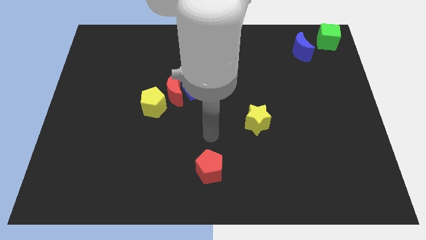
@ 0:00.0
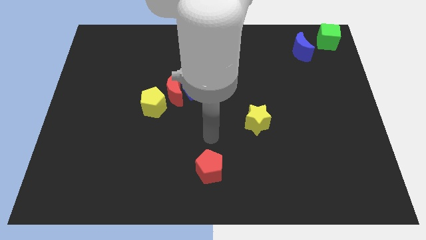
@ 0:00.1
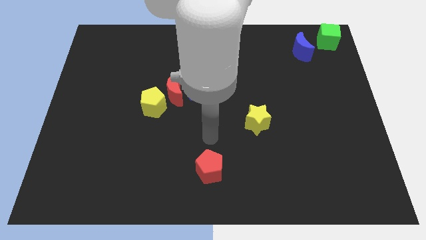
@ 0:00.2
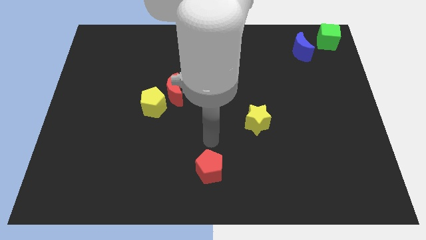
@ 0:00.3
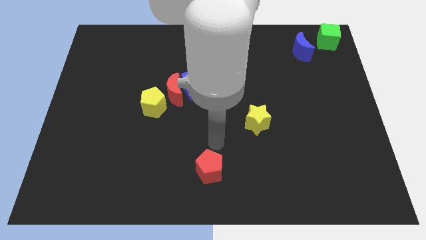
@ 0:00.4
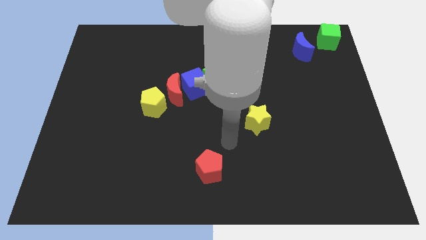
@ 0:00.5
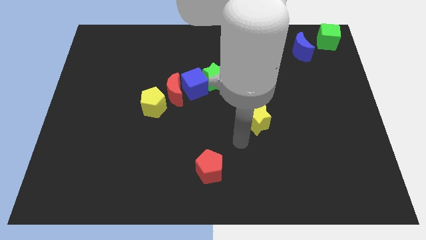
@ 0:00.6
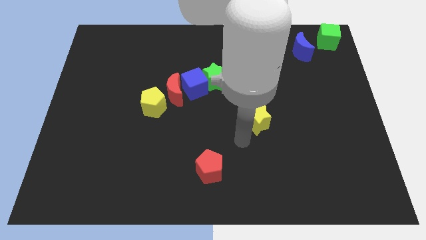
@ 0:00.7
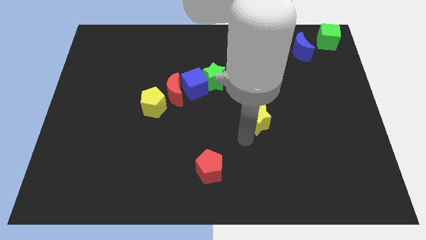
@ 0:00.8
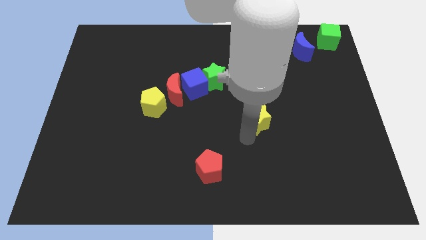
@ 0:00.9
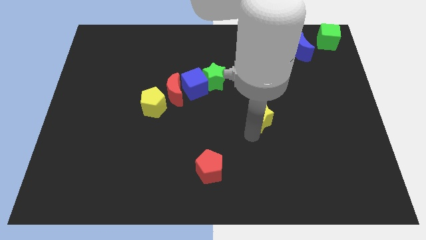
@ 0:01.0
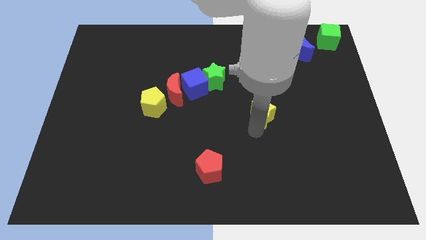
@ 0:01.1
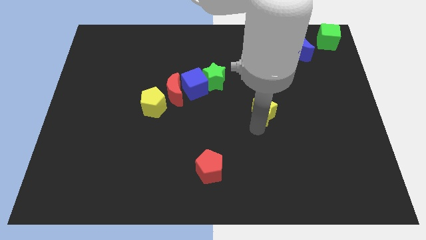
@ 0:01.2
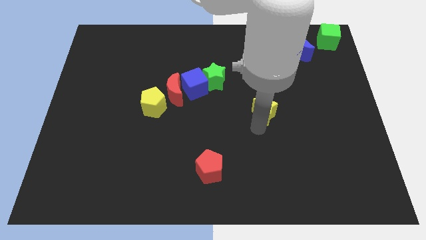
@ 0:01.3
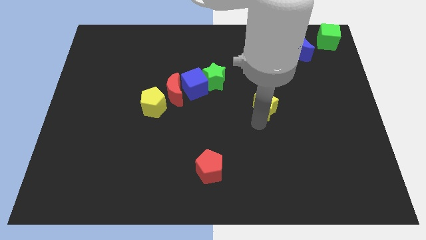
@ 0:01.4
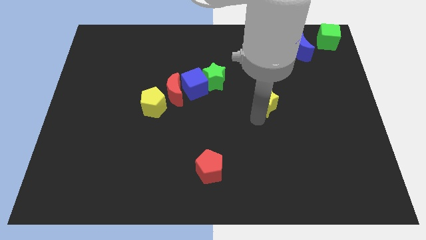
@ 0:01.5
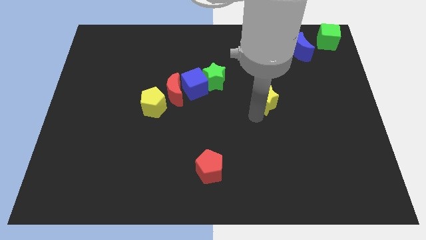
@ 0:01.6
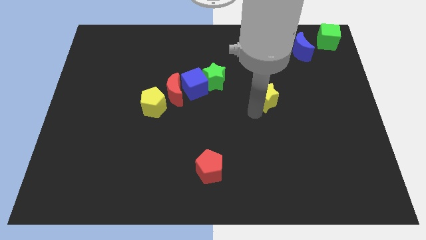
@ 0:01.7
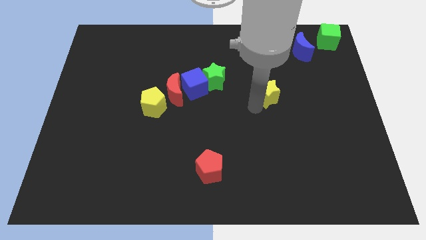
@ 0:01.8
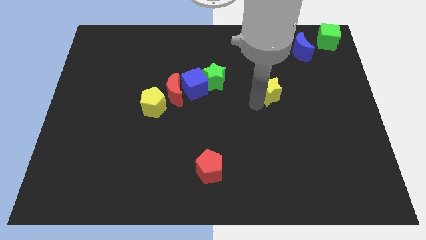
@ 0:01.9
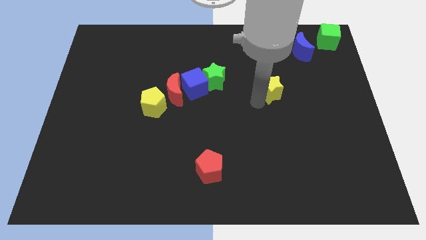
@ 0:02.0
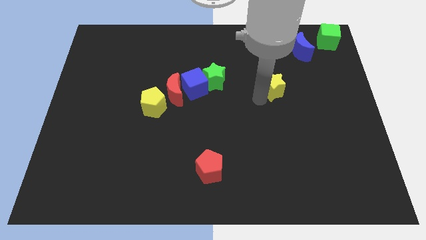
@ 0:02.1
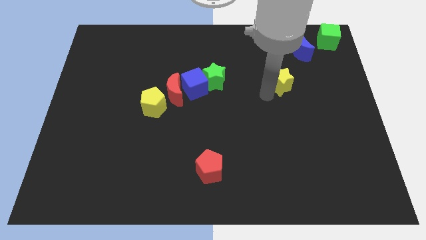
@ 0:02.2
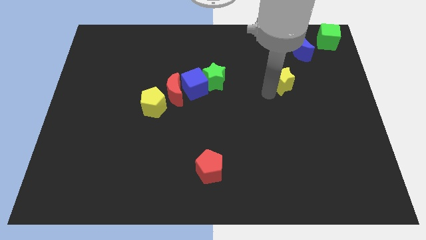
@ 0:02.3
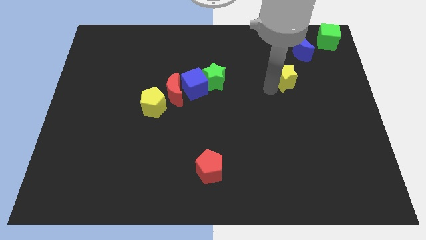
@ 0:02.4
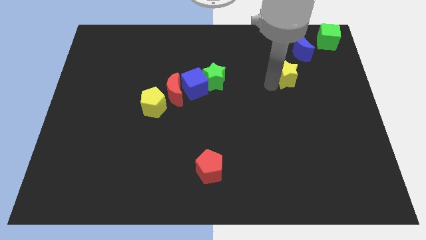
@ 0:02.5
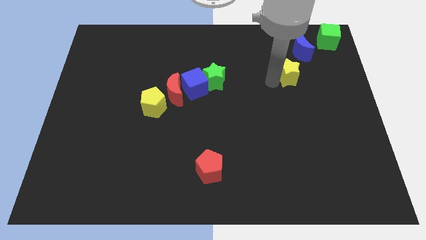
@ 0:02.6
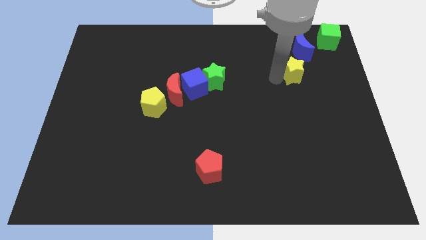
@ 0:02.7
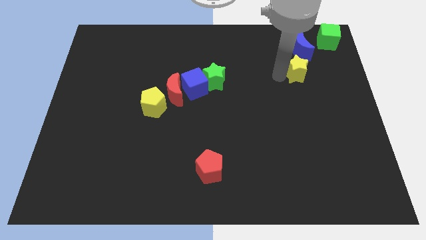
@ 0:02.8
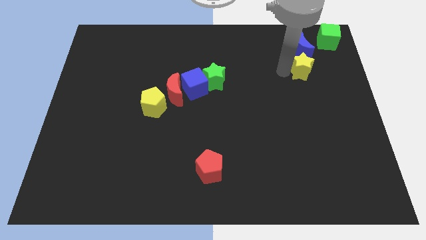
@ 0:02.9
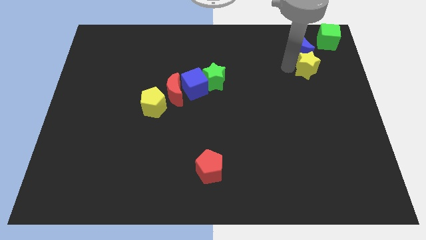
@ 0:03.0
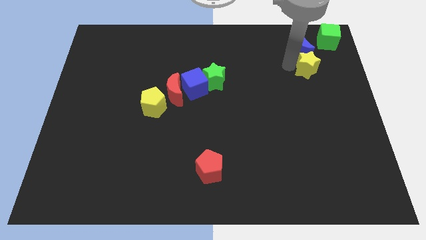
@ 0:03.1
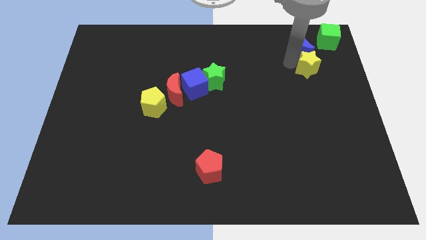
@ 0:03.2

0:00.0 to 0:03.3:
move the yellow star below the blue moon at the top

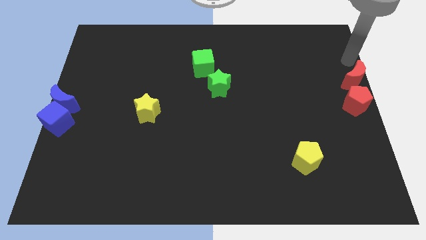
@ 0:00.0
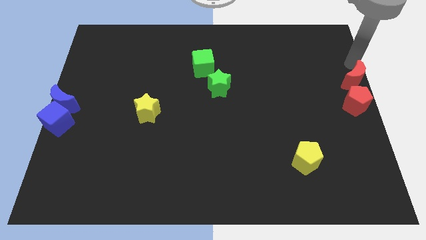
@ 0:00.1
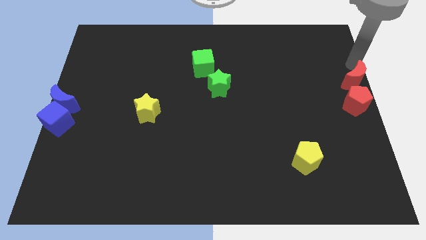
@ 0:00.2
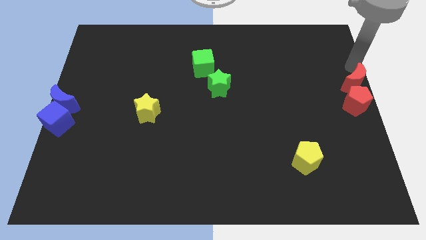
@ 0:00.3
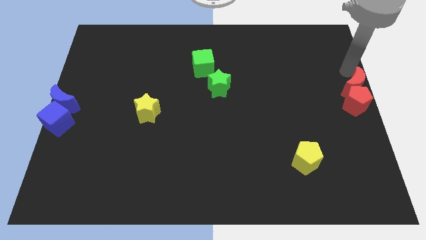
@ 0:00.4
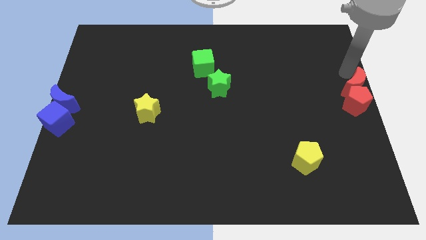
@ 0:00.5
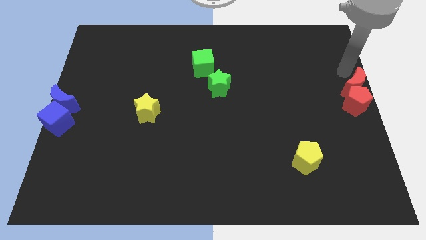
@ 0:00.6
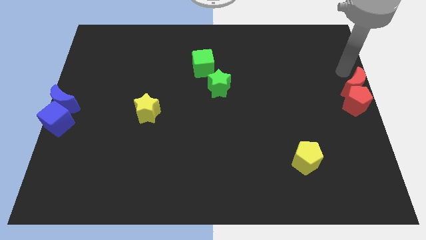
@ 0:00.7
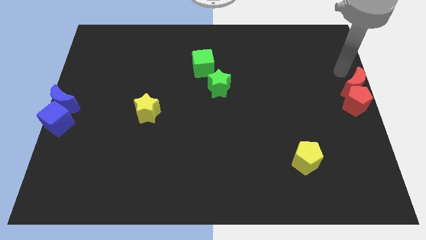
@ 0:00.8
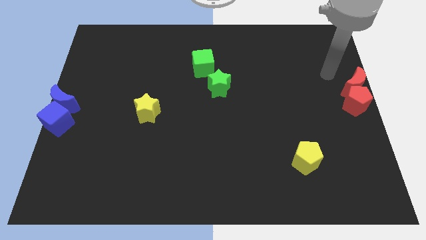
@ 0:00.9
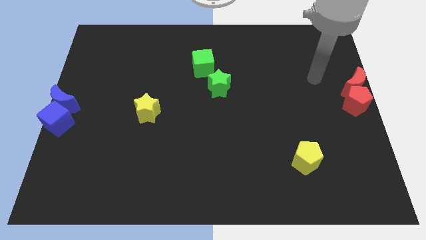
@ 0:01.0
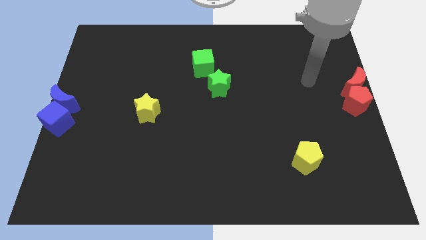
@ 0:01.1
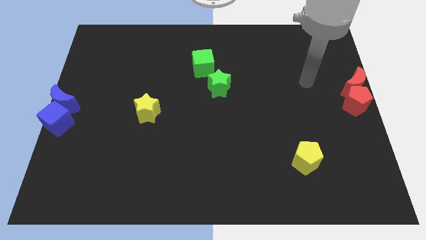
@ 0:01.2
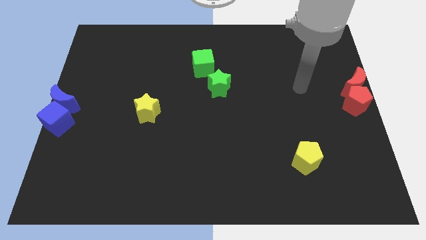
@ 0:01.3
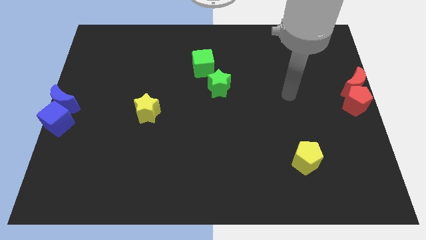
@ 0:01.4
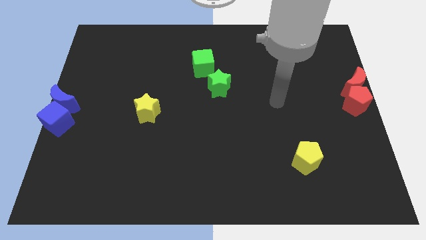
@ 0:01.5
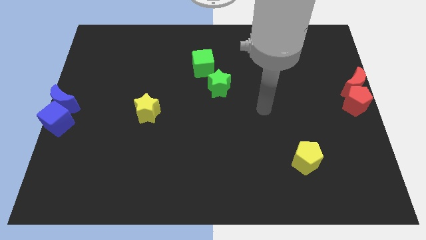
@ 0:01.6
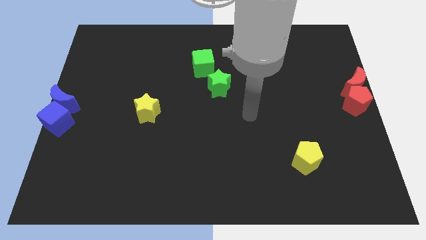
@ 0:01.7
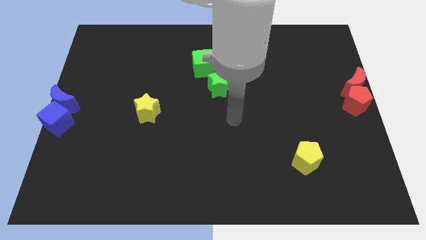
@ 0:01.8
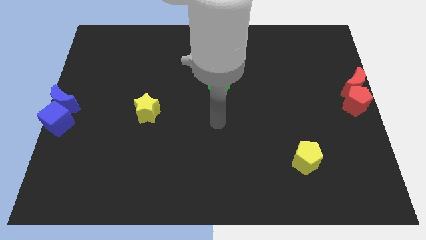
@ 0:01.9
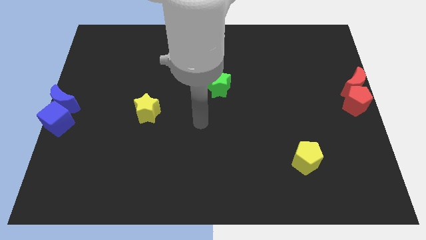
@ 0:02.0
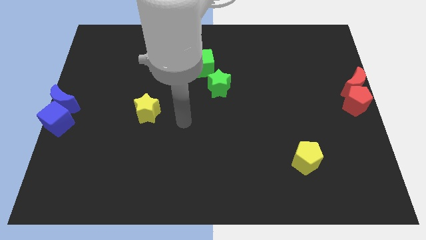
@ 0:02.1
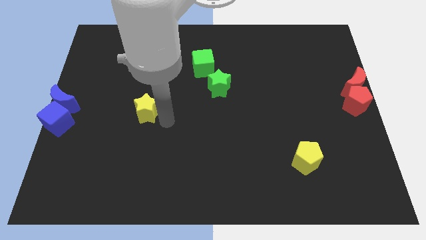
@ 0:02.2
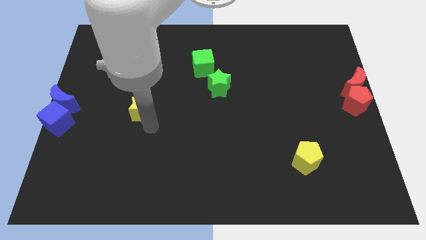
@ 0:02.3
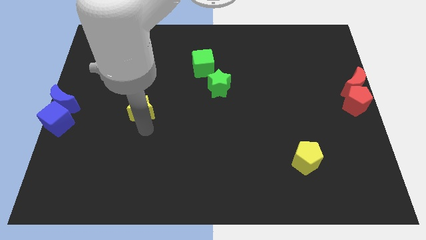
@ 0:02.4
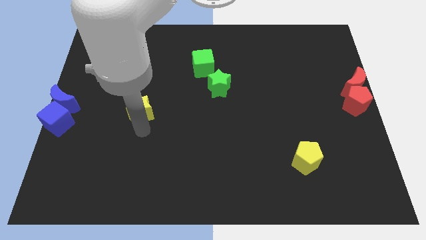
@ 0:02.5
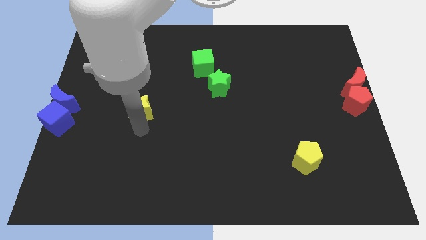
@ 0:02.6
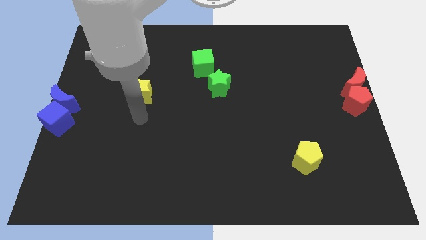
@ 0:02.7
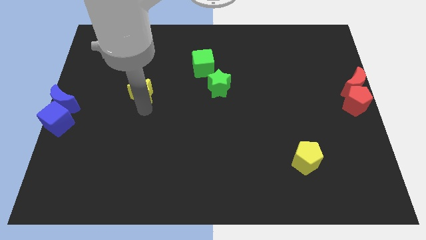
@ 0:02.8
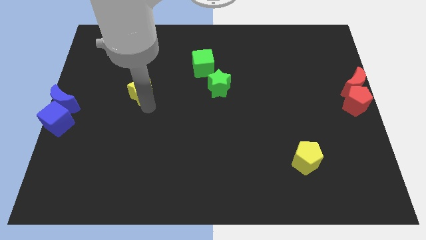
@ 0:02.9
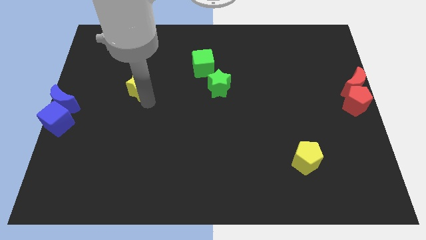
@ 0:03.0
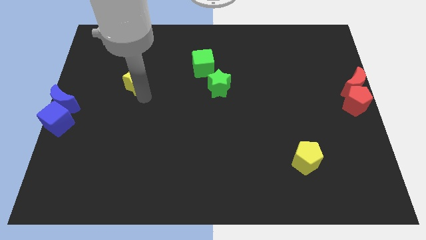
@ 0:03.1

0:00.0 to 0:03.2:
place the yellow star horizontal to the green star

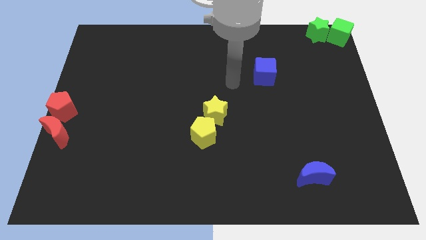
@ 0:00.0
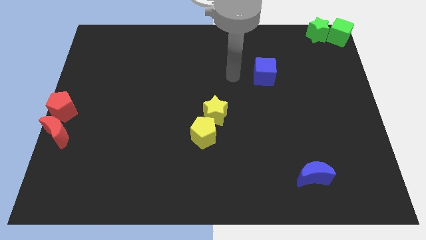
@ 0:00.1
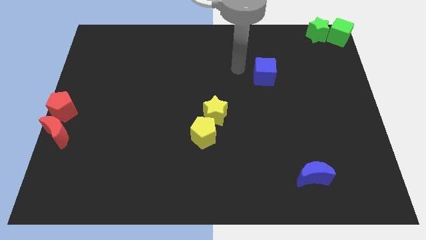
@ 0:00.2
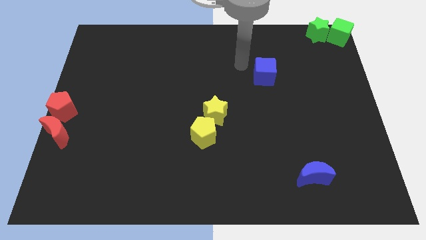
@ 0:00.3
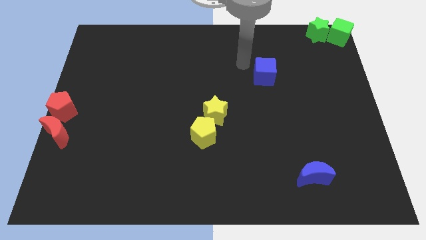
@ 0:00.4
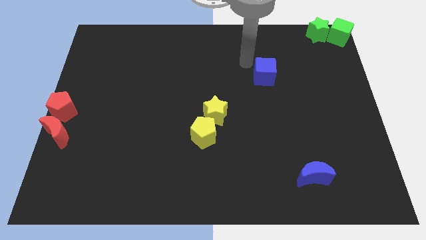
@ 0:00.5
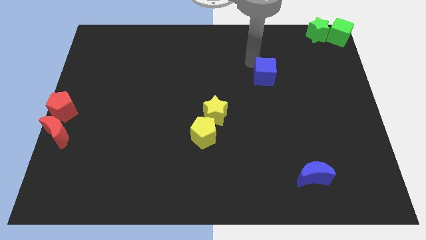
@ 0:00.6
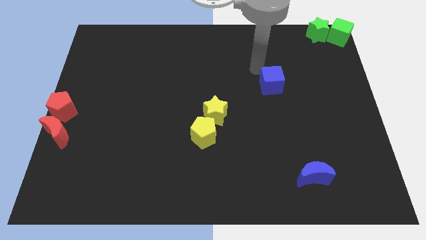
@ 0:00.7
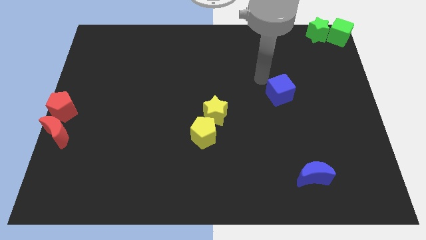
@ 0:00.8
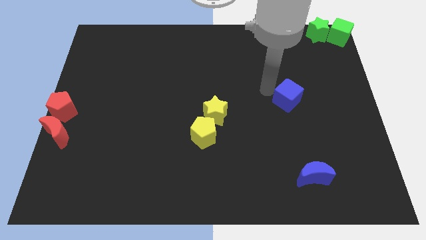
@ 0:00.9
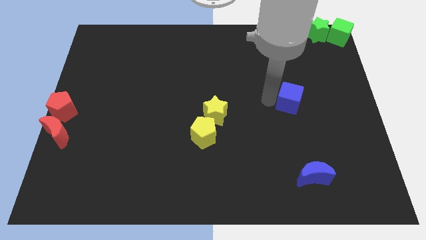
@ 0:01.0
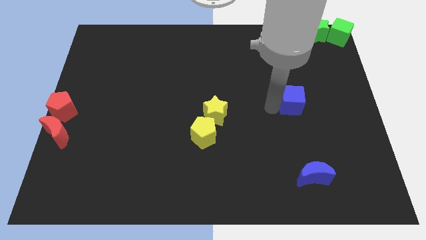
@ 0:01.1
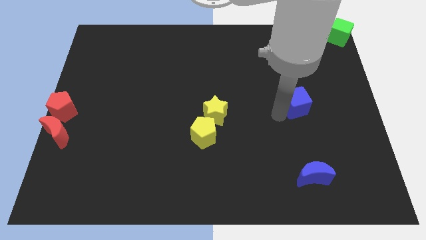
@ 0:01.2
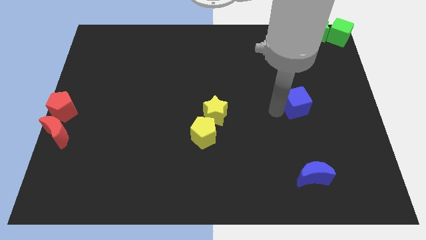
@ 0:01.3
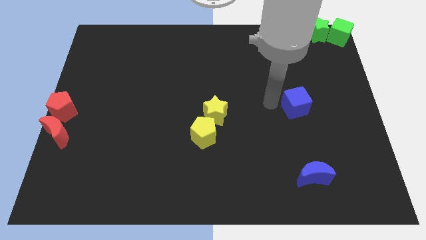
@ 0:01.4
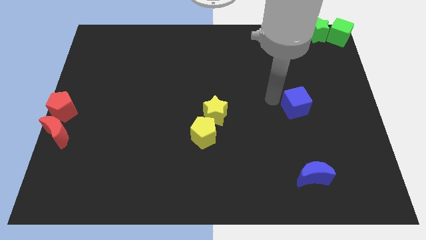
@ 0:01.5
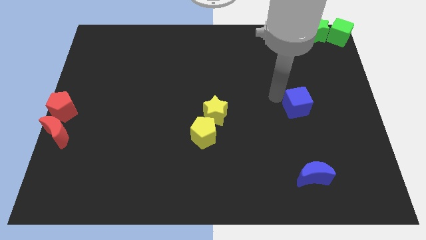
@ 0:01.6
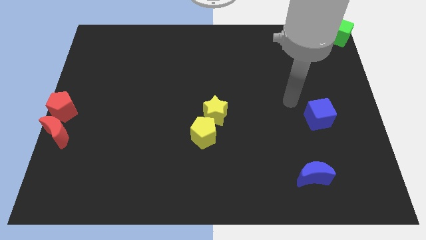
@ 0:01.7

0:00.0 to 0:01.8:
slide the blue cube to the right of the yellow star

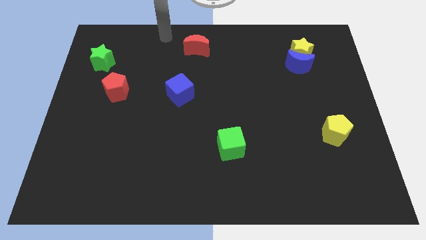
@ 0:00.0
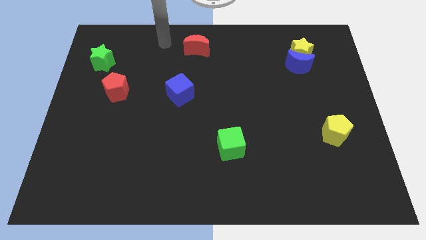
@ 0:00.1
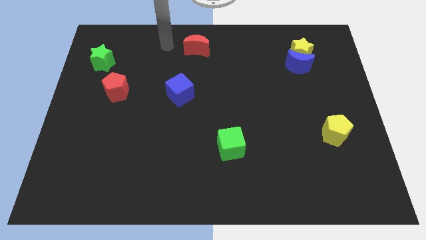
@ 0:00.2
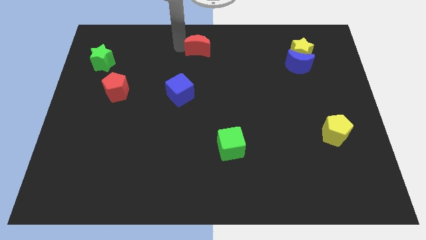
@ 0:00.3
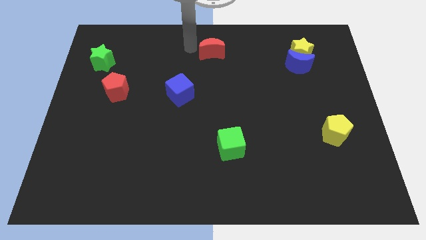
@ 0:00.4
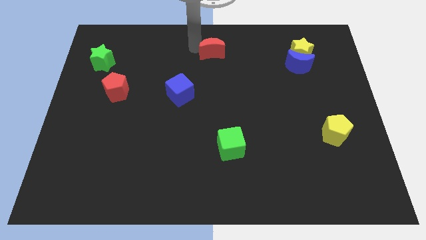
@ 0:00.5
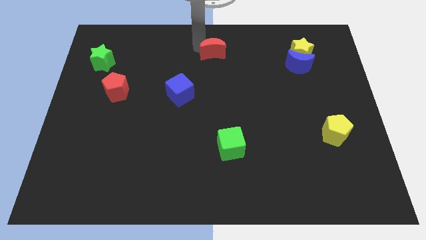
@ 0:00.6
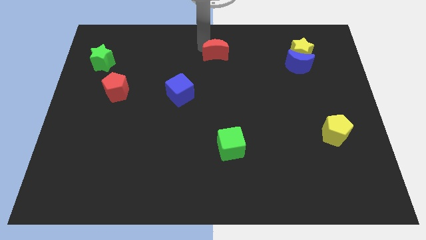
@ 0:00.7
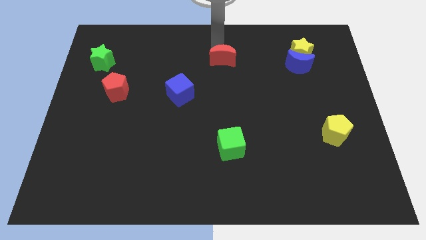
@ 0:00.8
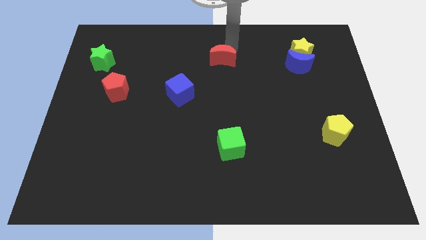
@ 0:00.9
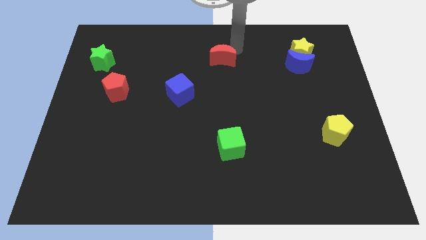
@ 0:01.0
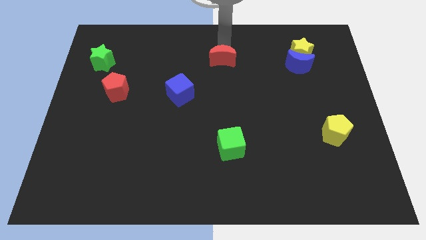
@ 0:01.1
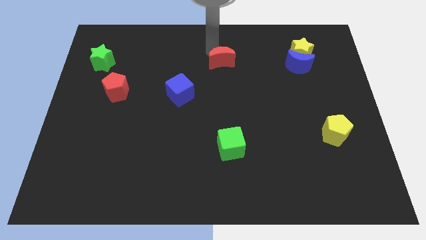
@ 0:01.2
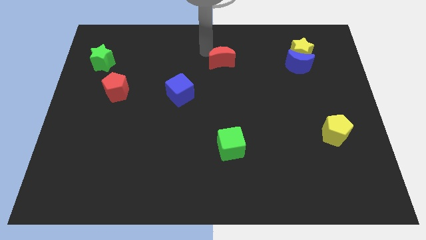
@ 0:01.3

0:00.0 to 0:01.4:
move the red crescent horizontal to the blue crescent
